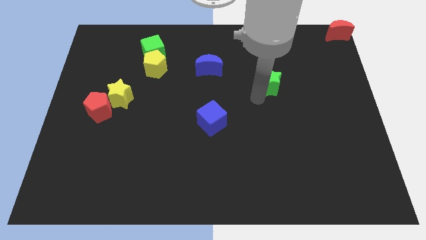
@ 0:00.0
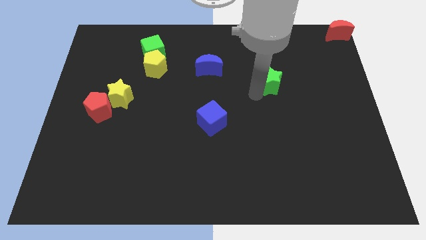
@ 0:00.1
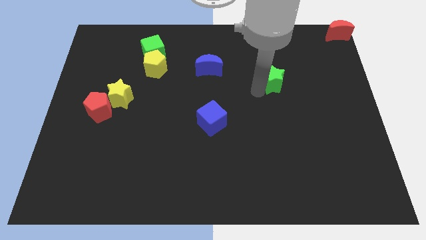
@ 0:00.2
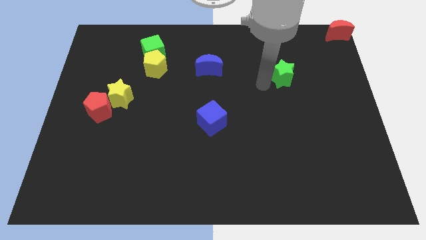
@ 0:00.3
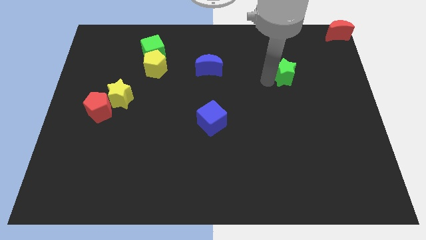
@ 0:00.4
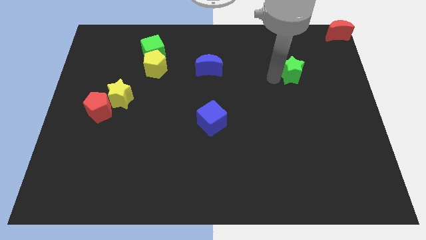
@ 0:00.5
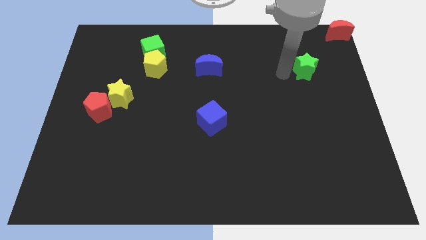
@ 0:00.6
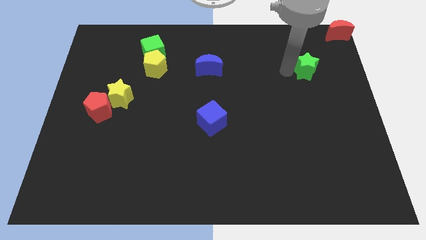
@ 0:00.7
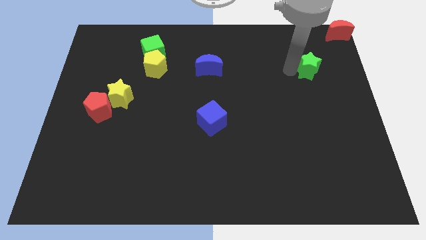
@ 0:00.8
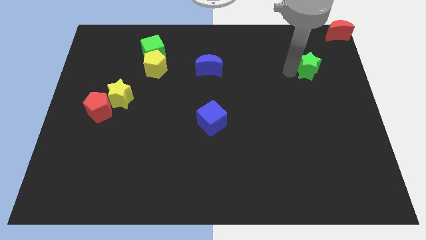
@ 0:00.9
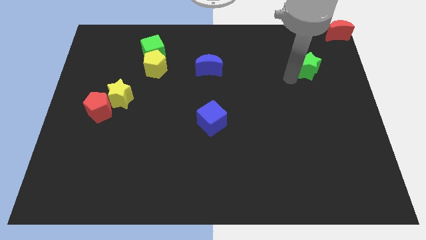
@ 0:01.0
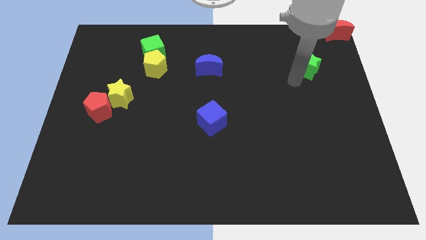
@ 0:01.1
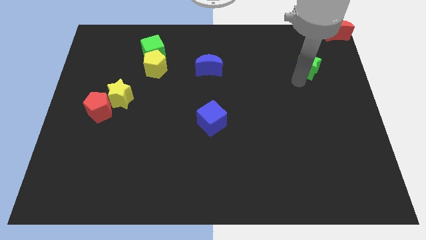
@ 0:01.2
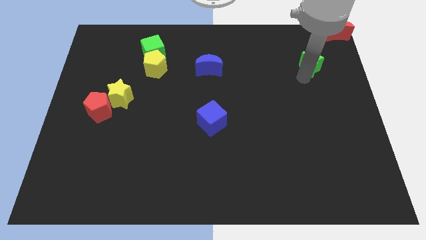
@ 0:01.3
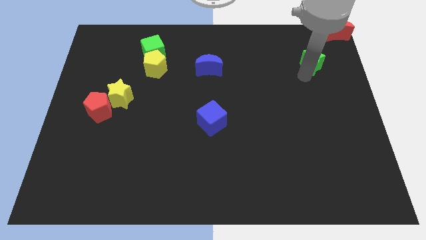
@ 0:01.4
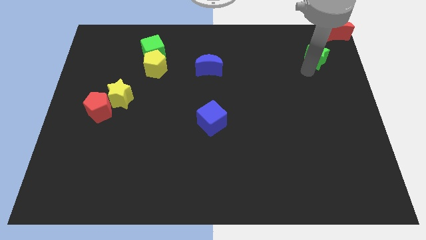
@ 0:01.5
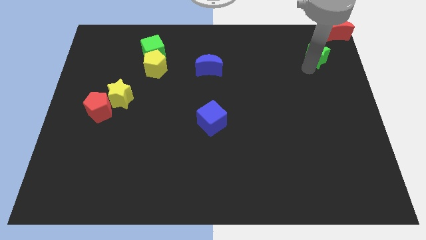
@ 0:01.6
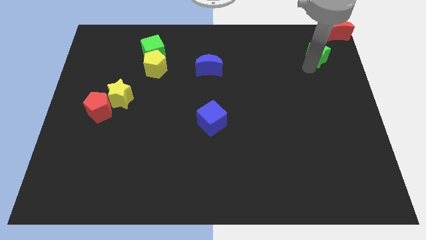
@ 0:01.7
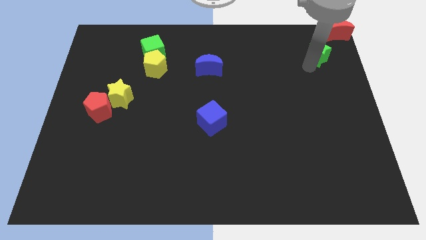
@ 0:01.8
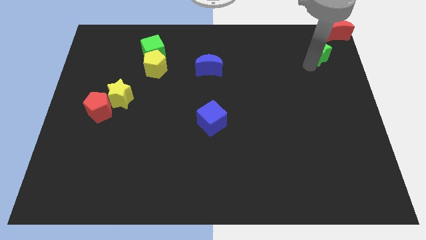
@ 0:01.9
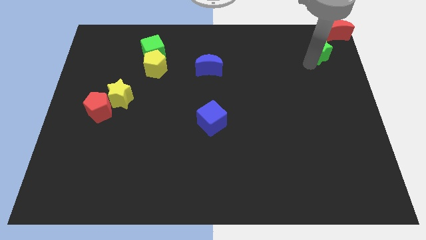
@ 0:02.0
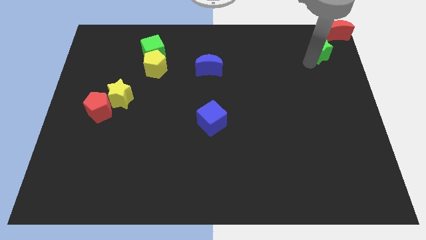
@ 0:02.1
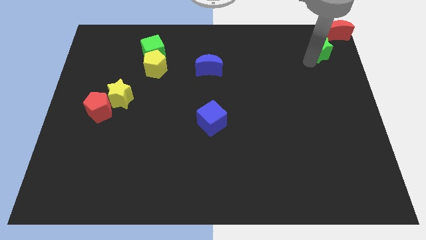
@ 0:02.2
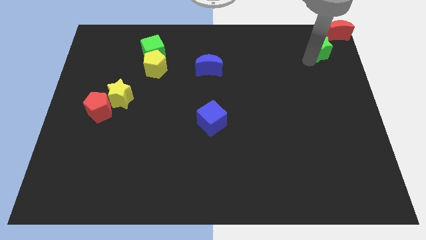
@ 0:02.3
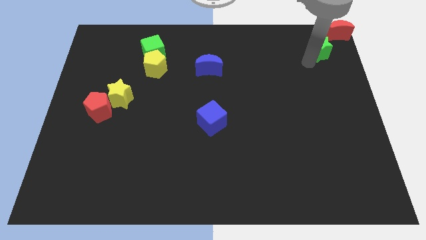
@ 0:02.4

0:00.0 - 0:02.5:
place the green star diagonally below the red crescent

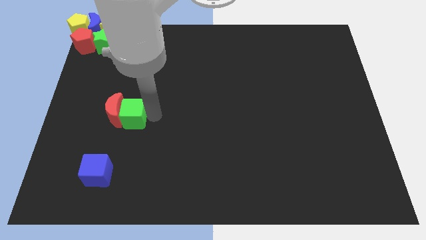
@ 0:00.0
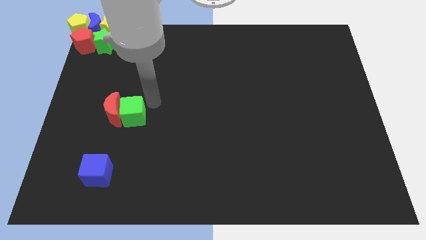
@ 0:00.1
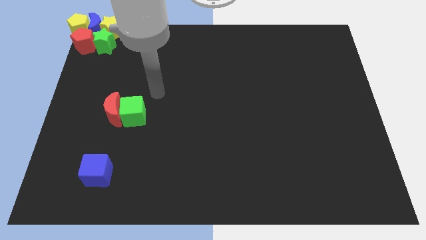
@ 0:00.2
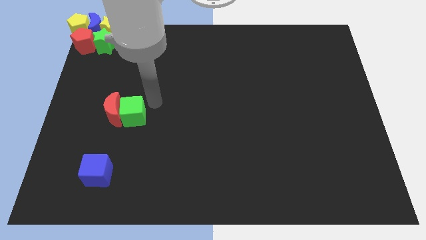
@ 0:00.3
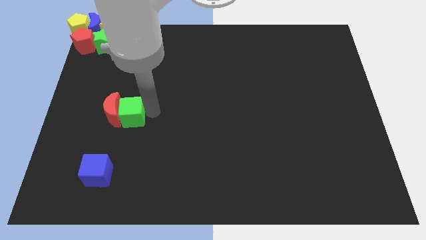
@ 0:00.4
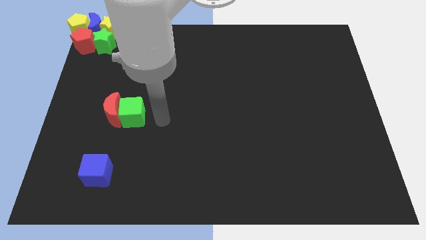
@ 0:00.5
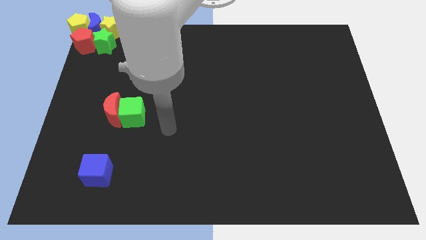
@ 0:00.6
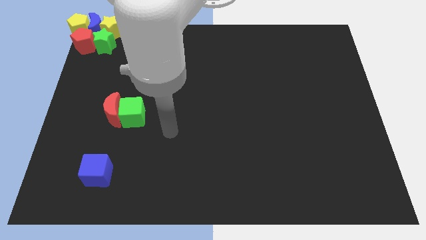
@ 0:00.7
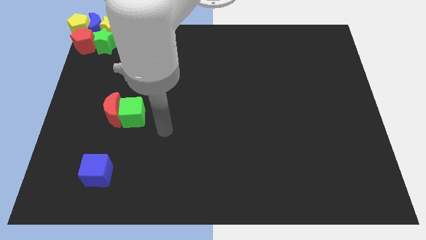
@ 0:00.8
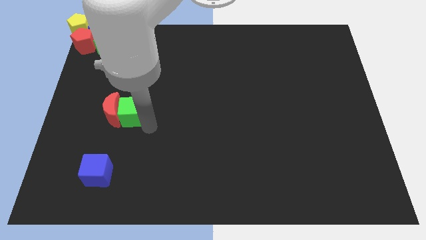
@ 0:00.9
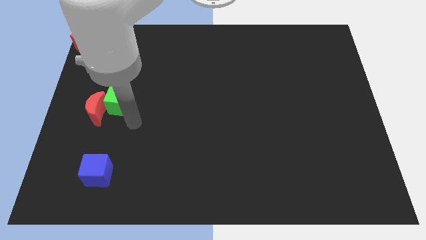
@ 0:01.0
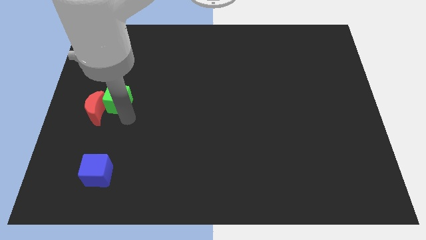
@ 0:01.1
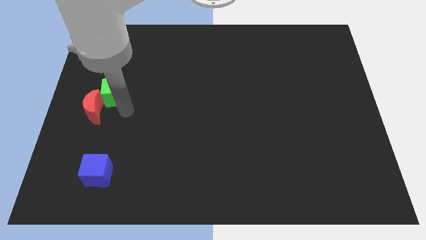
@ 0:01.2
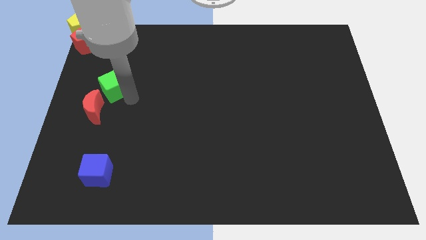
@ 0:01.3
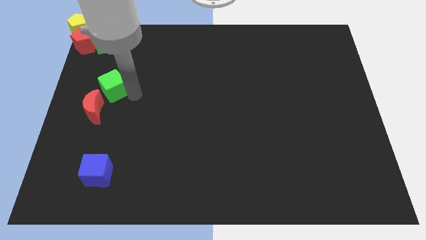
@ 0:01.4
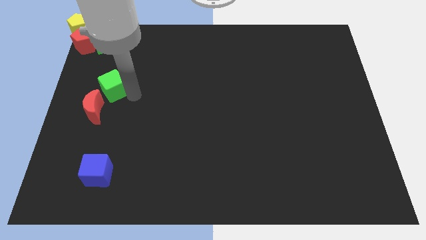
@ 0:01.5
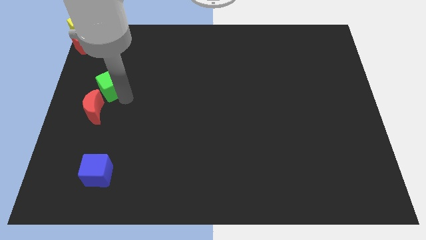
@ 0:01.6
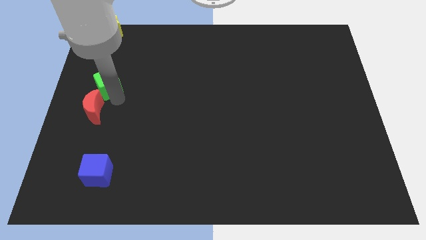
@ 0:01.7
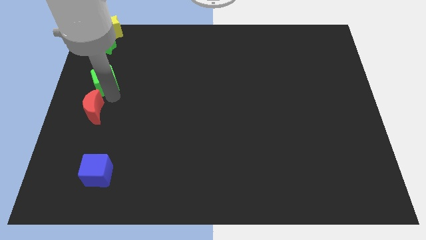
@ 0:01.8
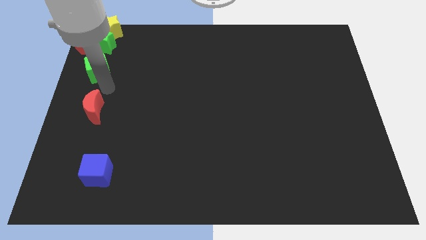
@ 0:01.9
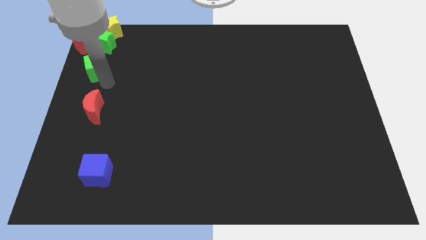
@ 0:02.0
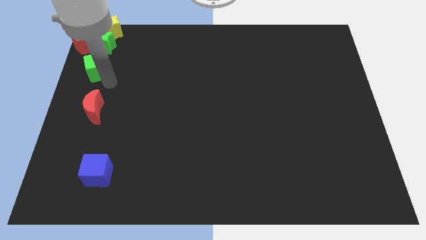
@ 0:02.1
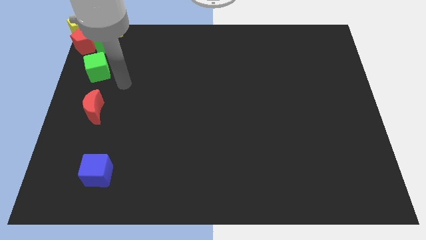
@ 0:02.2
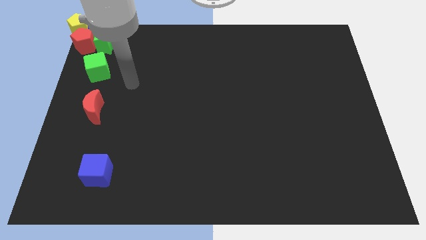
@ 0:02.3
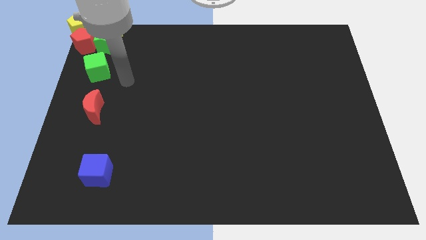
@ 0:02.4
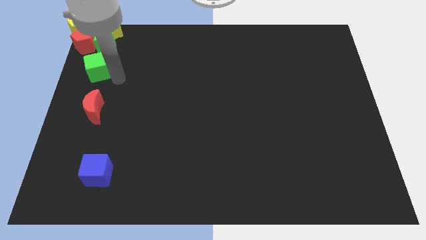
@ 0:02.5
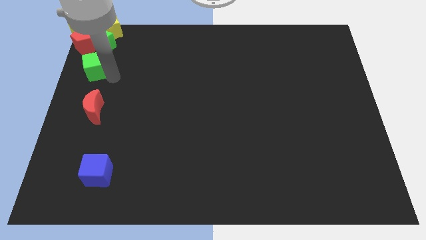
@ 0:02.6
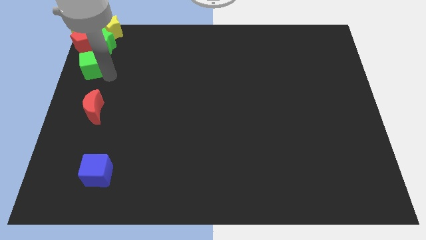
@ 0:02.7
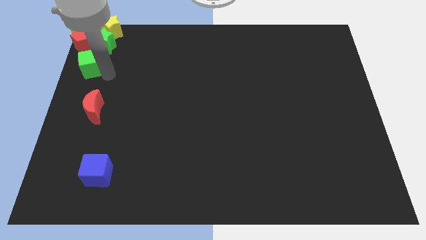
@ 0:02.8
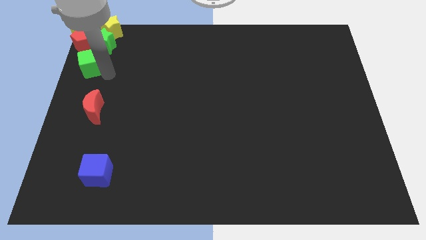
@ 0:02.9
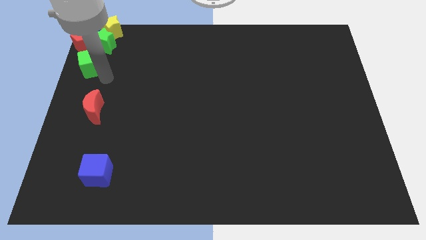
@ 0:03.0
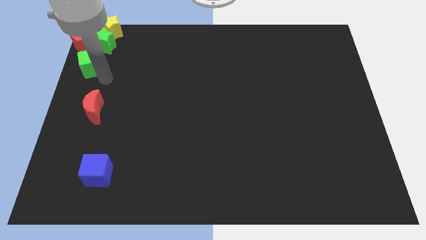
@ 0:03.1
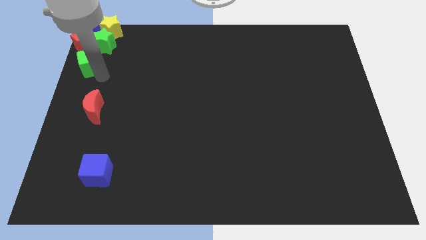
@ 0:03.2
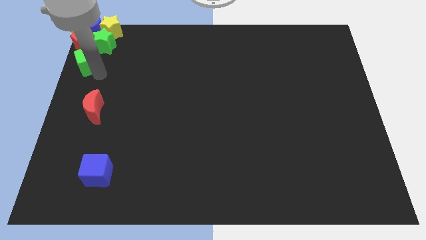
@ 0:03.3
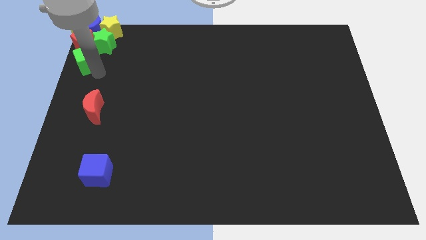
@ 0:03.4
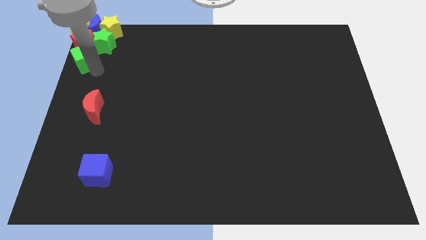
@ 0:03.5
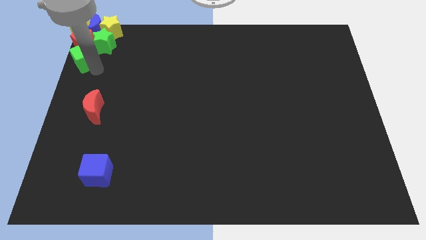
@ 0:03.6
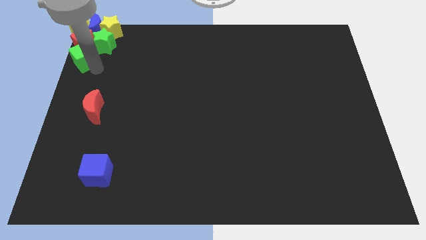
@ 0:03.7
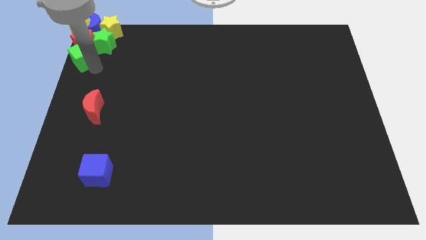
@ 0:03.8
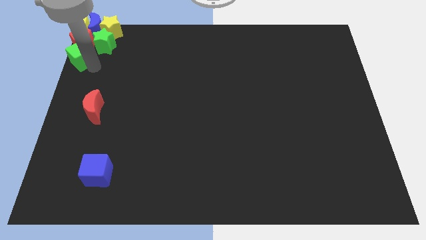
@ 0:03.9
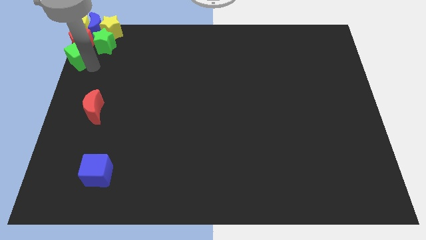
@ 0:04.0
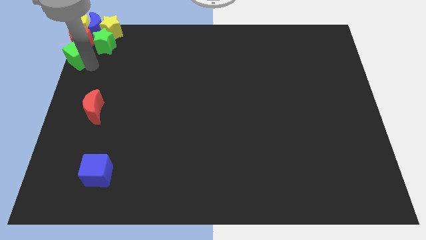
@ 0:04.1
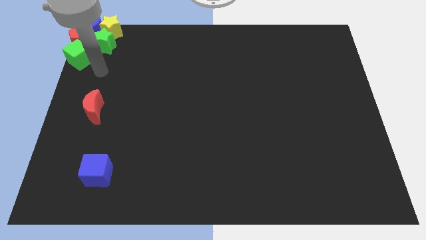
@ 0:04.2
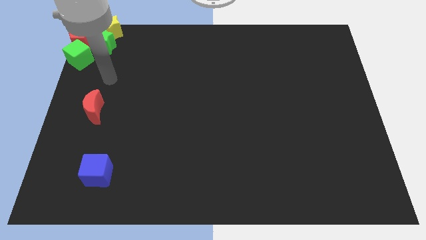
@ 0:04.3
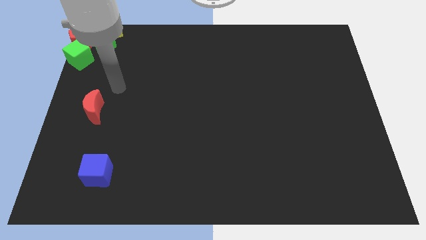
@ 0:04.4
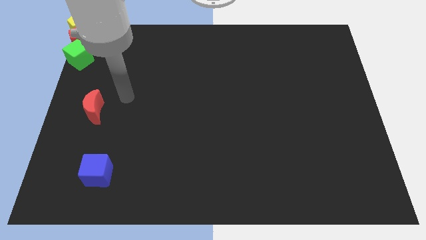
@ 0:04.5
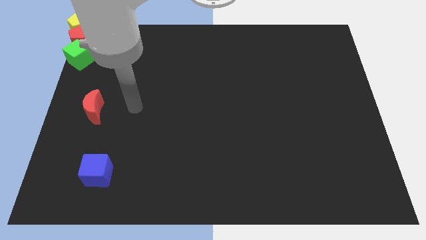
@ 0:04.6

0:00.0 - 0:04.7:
push the green cube into the group of blocks

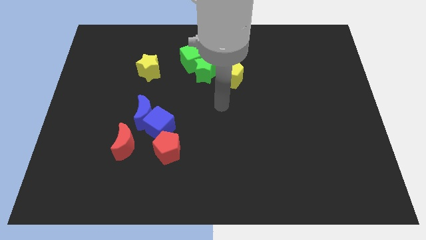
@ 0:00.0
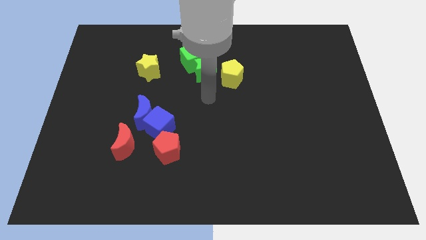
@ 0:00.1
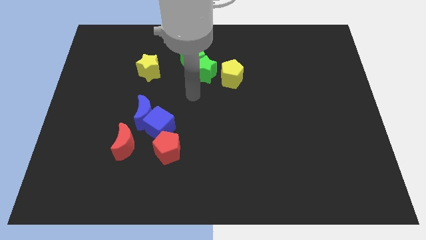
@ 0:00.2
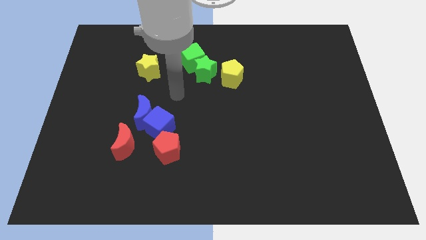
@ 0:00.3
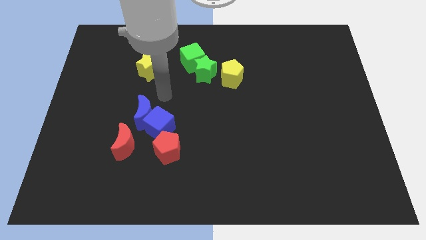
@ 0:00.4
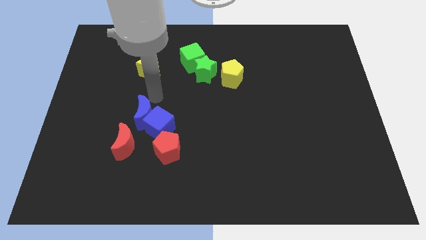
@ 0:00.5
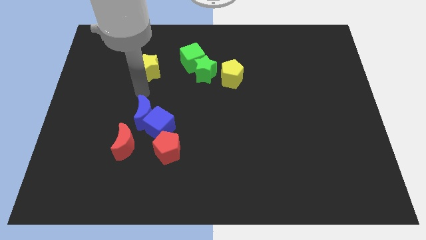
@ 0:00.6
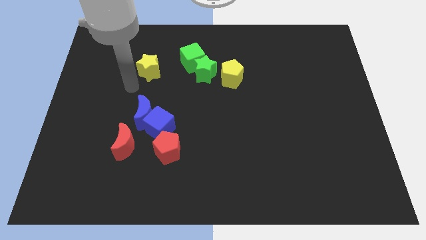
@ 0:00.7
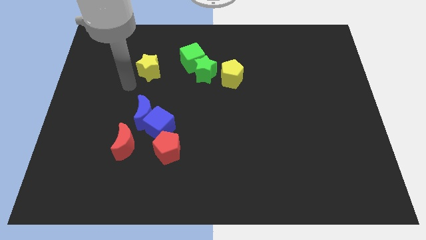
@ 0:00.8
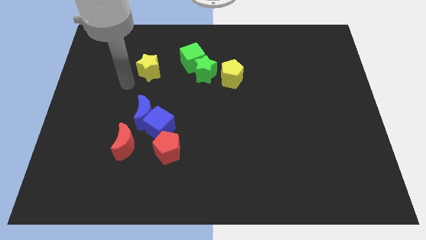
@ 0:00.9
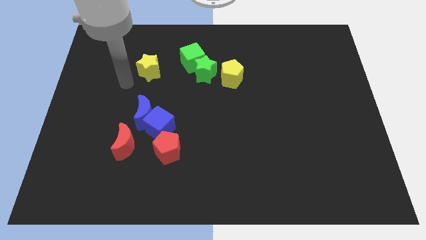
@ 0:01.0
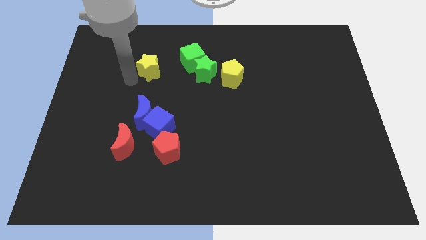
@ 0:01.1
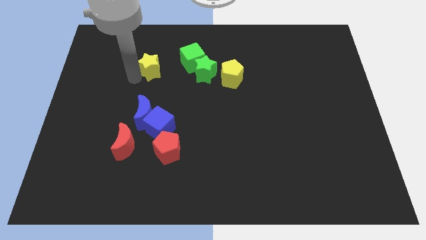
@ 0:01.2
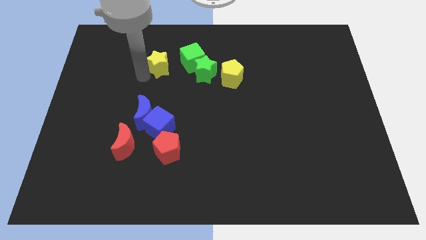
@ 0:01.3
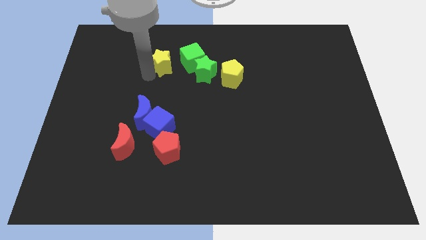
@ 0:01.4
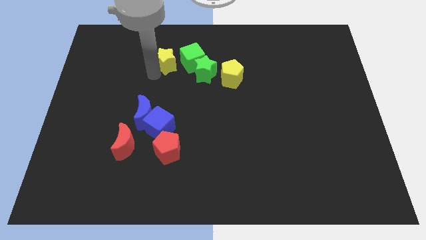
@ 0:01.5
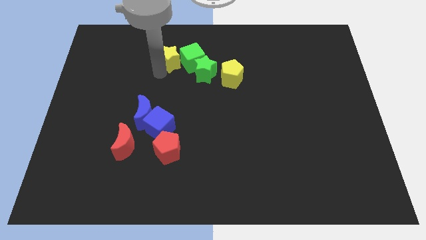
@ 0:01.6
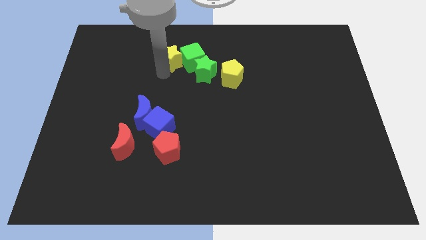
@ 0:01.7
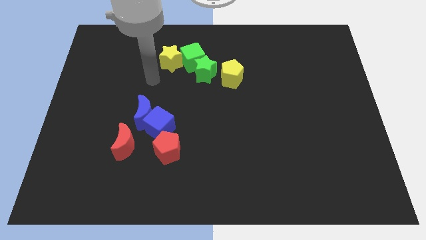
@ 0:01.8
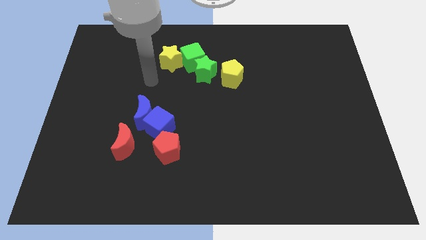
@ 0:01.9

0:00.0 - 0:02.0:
move the yellow star close to the green cube in the left
